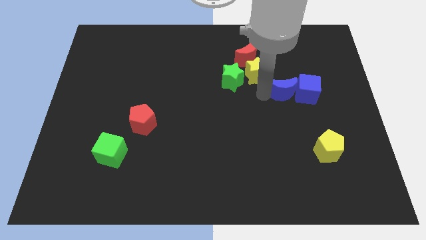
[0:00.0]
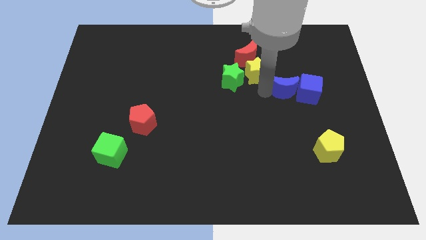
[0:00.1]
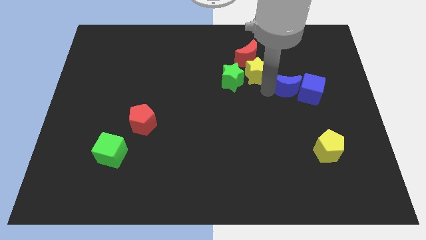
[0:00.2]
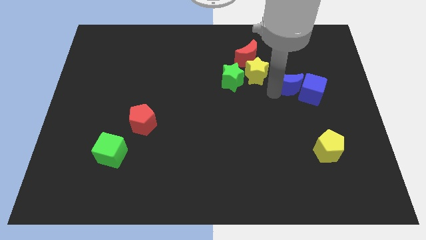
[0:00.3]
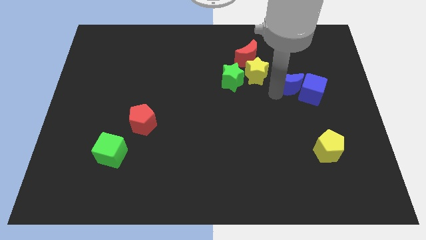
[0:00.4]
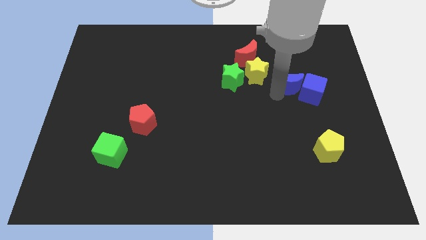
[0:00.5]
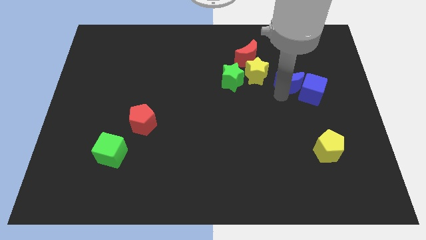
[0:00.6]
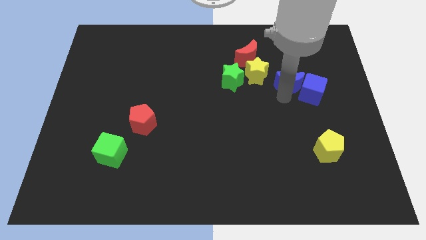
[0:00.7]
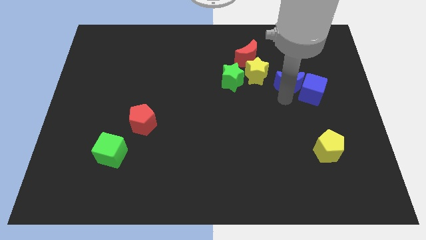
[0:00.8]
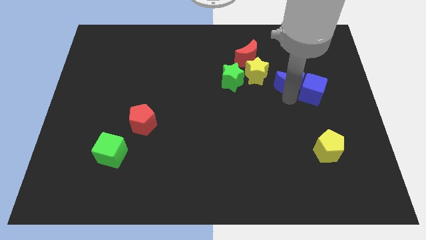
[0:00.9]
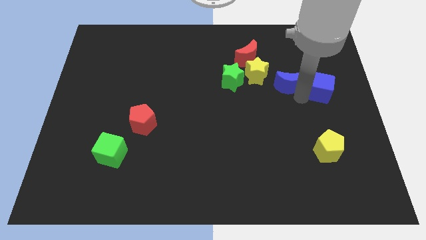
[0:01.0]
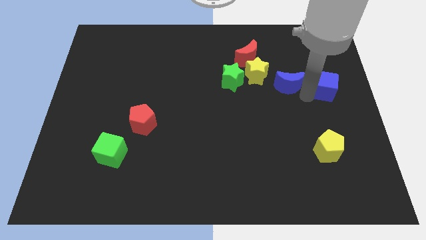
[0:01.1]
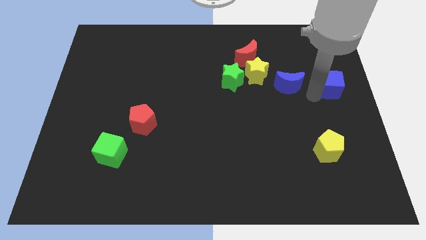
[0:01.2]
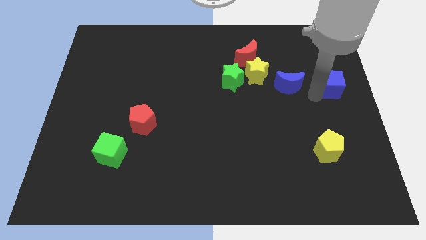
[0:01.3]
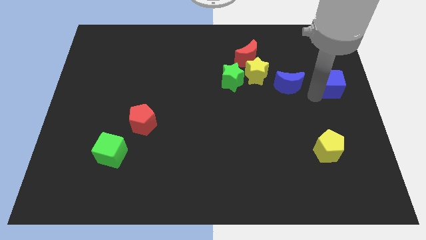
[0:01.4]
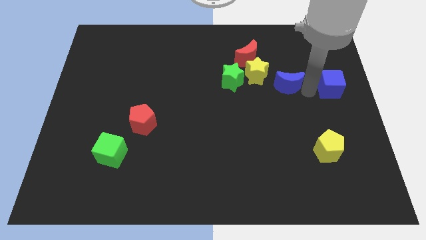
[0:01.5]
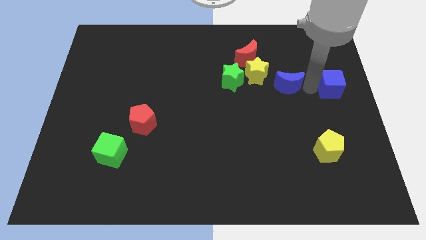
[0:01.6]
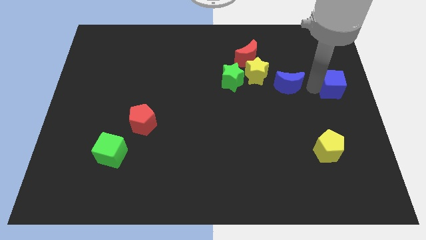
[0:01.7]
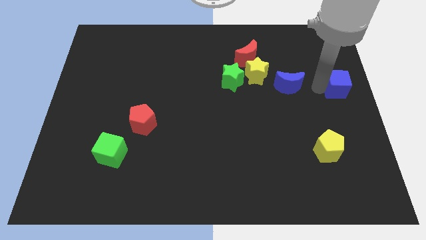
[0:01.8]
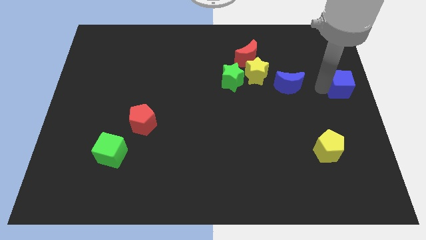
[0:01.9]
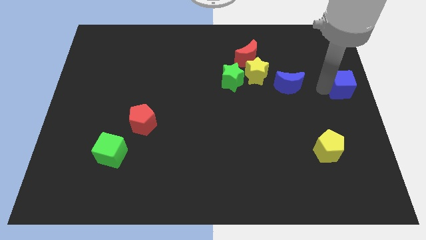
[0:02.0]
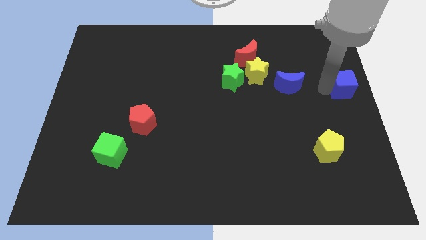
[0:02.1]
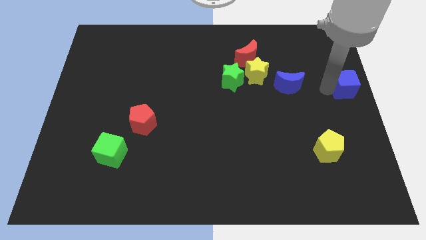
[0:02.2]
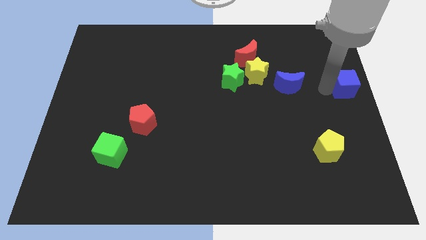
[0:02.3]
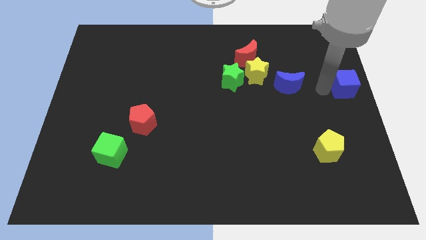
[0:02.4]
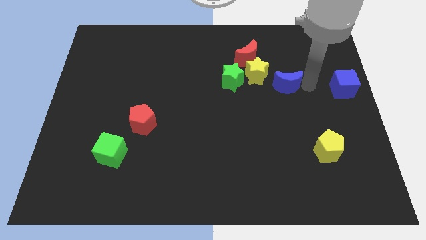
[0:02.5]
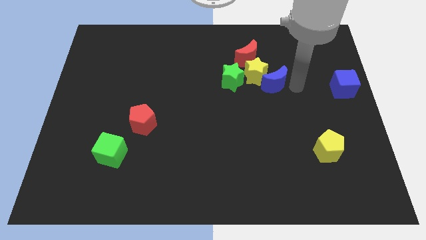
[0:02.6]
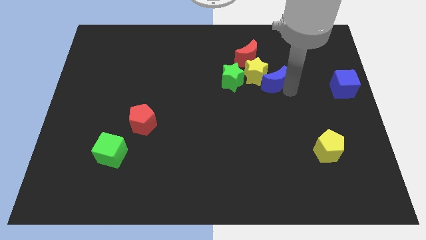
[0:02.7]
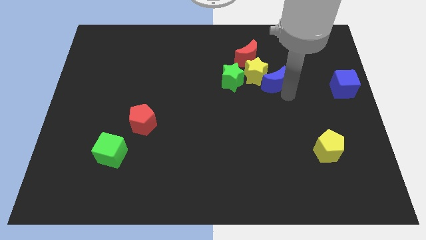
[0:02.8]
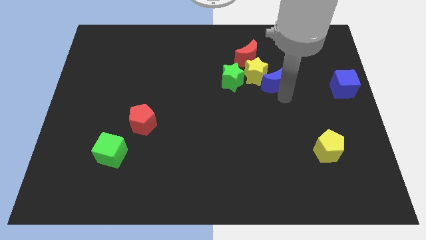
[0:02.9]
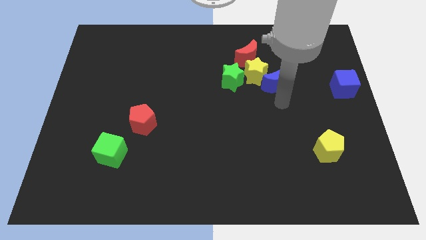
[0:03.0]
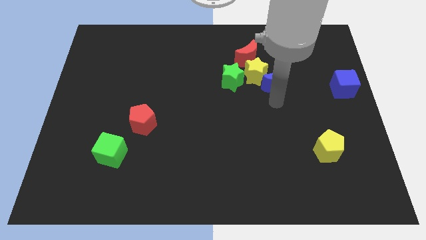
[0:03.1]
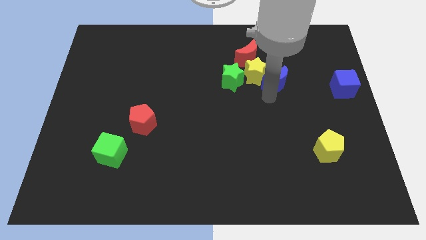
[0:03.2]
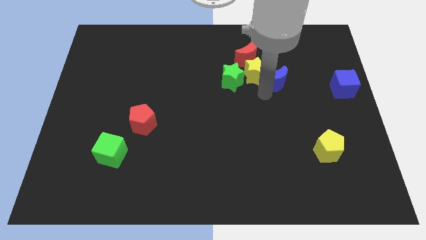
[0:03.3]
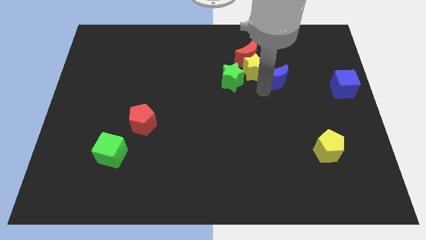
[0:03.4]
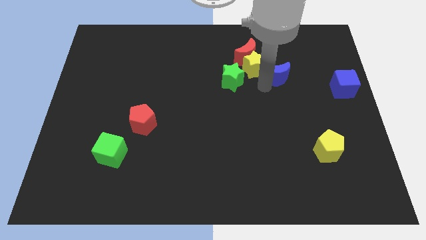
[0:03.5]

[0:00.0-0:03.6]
separate the blue crescent and blue cube to each other

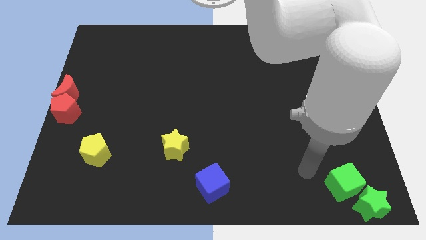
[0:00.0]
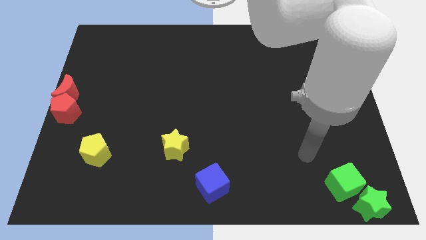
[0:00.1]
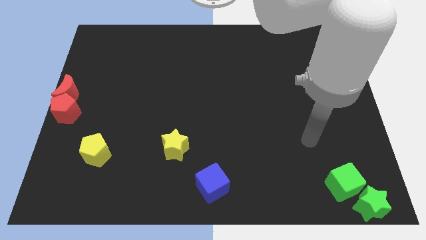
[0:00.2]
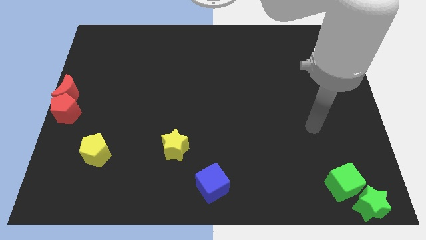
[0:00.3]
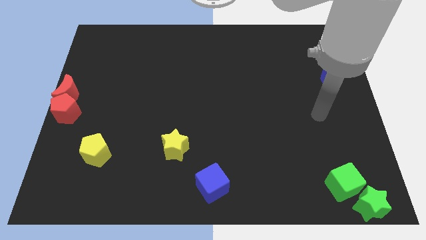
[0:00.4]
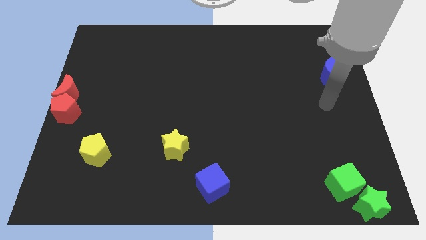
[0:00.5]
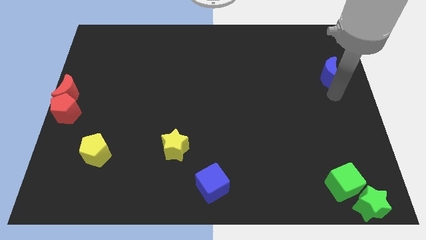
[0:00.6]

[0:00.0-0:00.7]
move the arm down to the blue moon

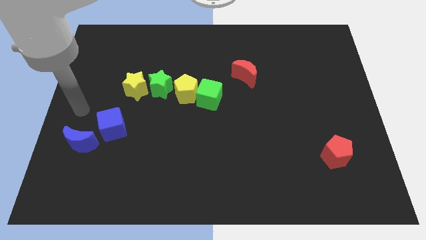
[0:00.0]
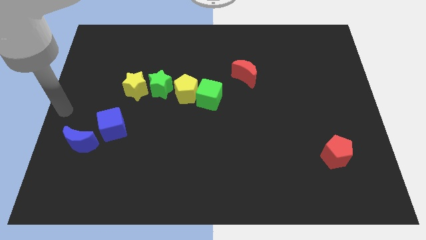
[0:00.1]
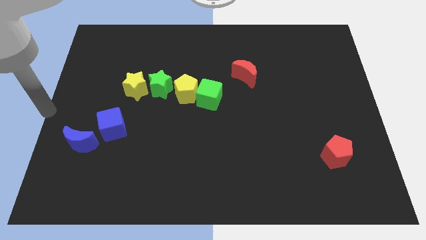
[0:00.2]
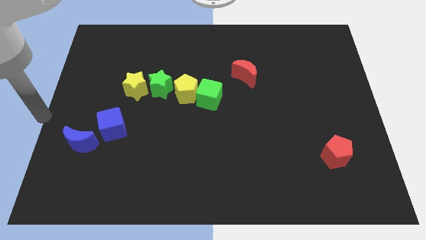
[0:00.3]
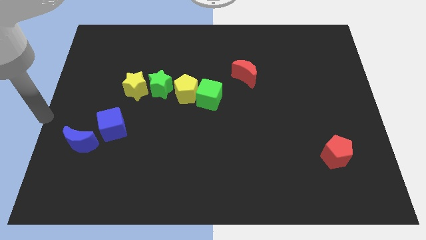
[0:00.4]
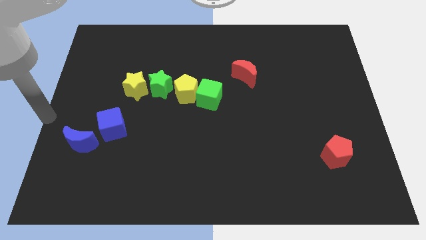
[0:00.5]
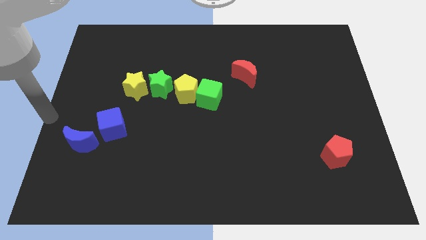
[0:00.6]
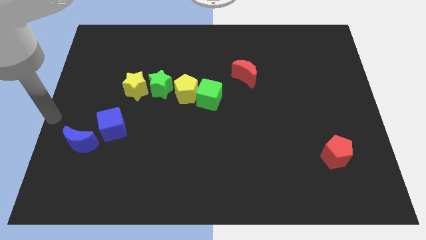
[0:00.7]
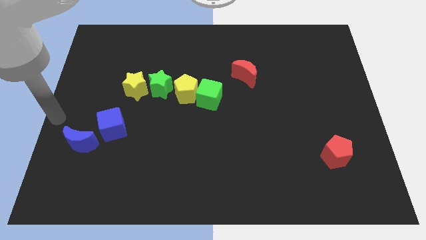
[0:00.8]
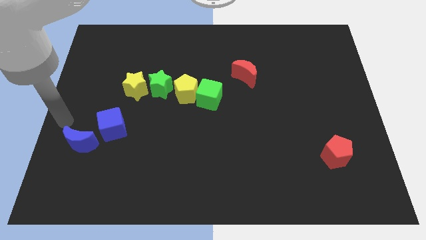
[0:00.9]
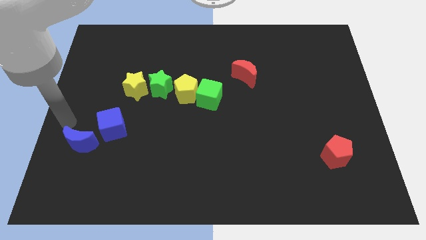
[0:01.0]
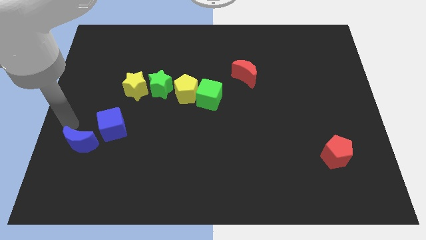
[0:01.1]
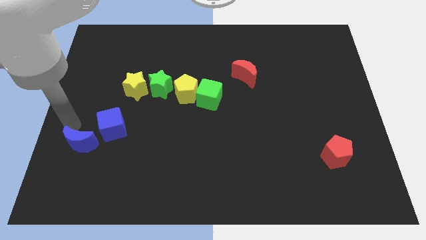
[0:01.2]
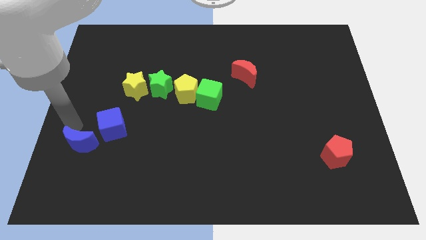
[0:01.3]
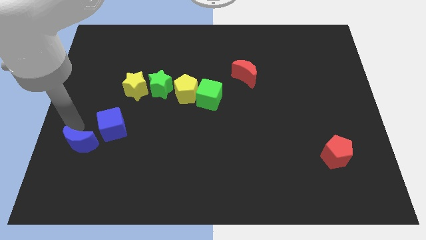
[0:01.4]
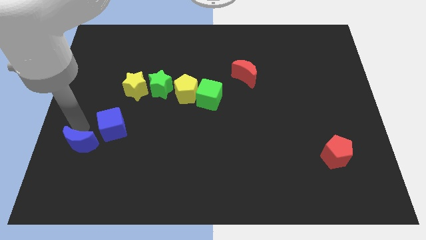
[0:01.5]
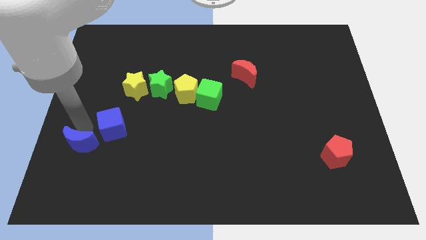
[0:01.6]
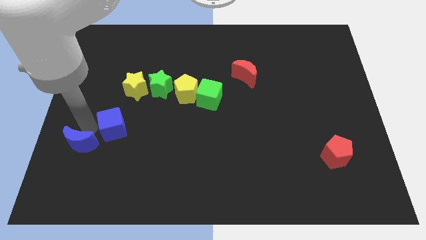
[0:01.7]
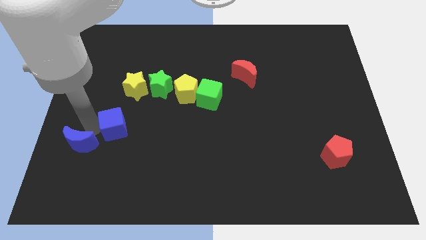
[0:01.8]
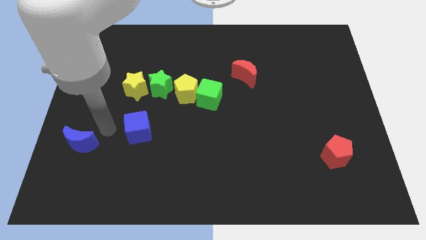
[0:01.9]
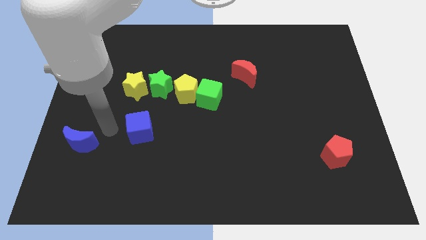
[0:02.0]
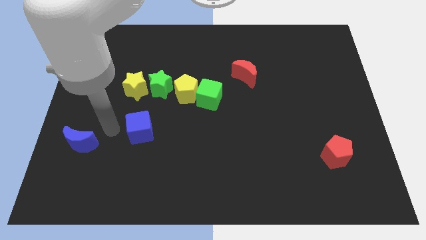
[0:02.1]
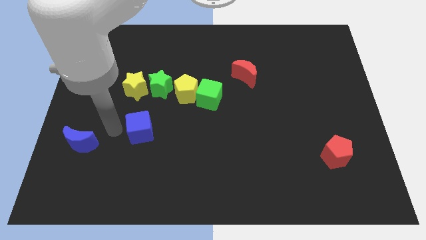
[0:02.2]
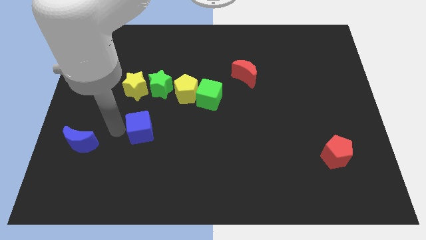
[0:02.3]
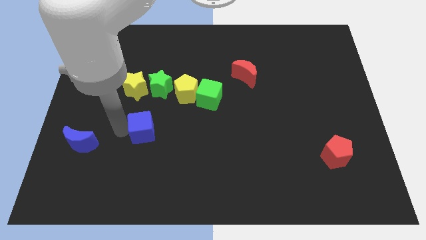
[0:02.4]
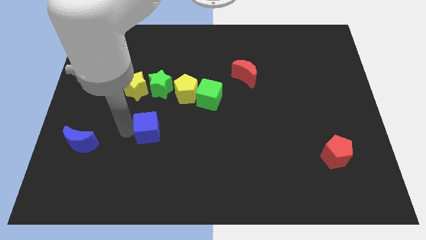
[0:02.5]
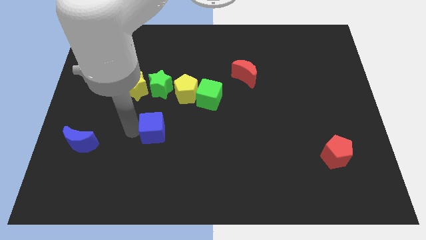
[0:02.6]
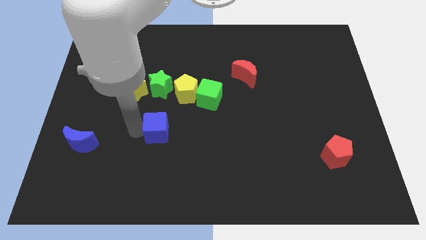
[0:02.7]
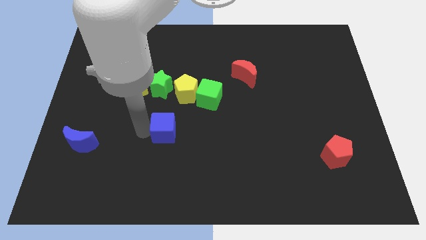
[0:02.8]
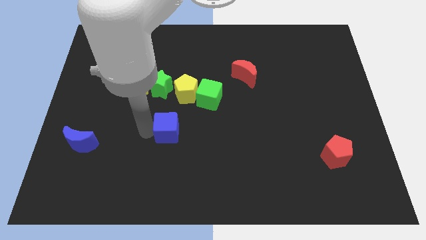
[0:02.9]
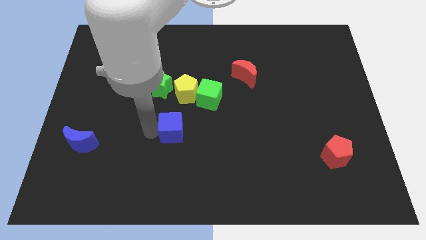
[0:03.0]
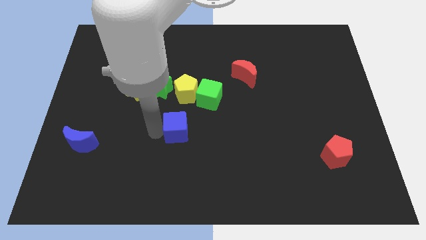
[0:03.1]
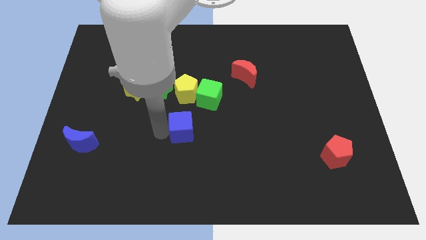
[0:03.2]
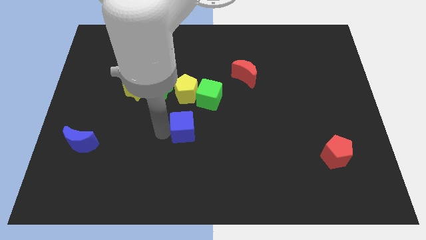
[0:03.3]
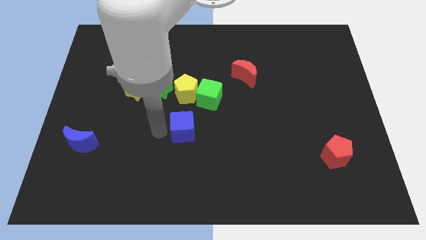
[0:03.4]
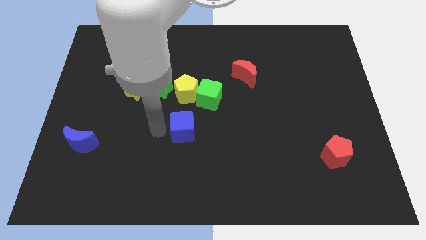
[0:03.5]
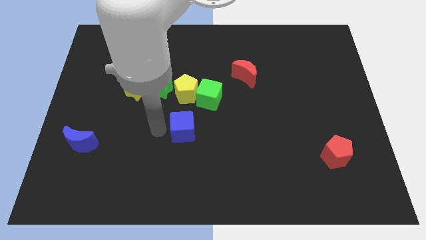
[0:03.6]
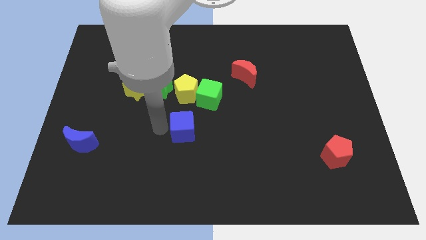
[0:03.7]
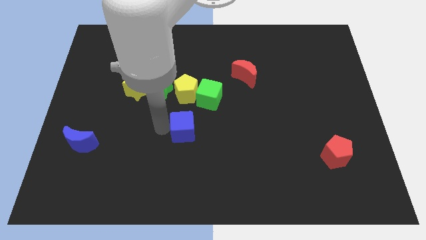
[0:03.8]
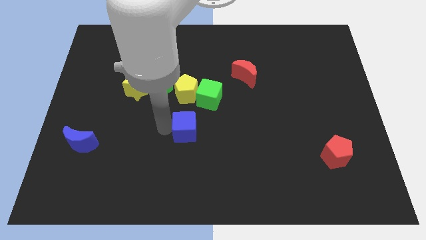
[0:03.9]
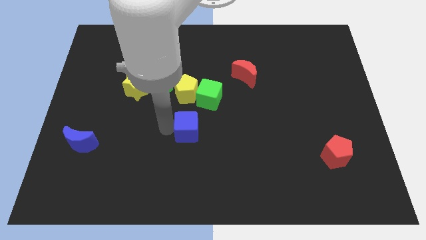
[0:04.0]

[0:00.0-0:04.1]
separate the blue cube from the blue crescent

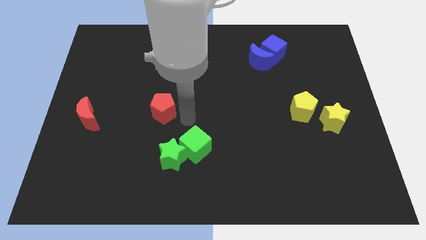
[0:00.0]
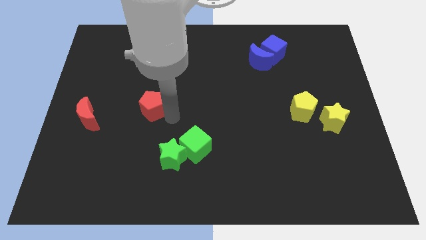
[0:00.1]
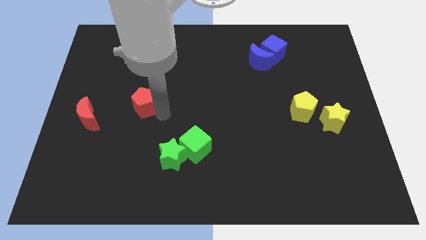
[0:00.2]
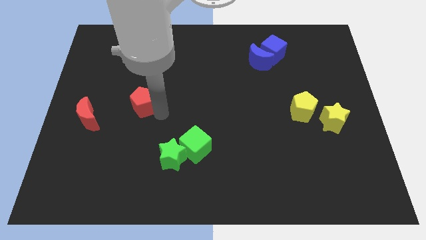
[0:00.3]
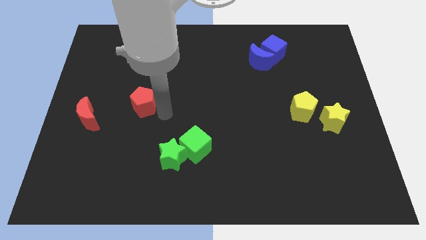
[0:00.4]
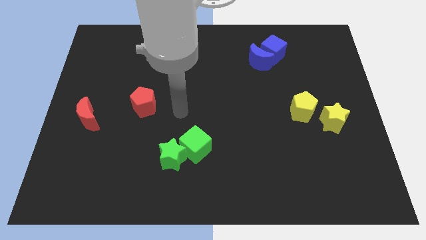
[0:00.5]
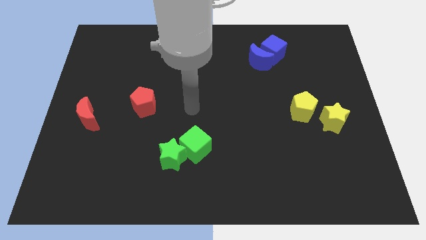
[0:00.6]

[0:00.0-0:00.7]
slide the red pentagon towards the left side of the board
